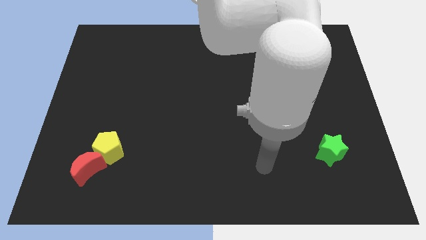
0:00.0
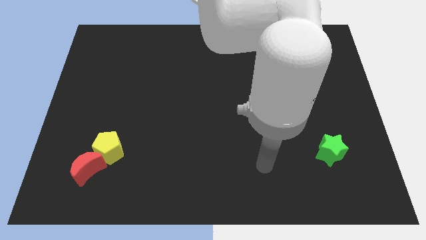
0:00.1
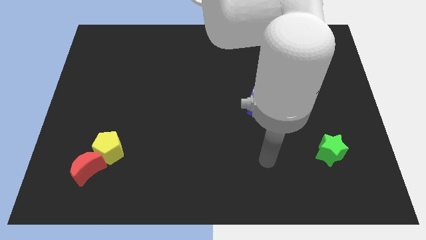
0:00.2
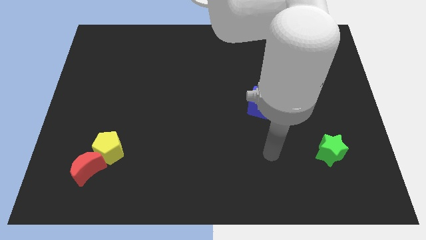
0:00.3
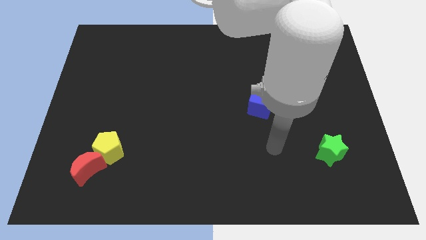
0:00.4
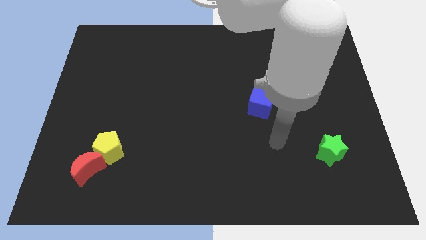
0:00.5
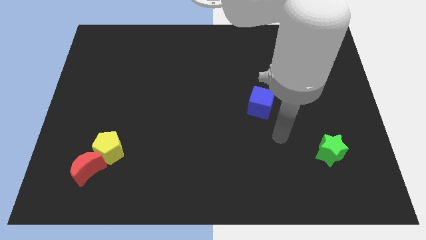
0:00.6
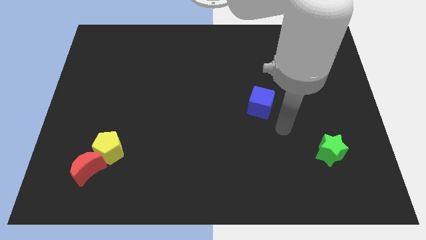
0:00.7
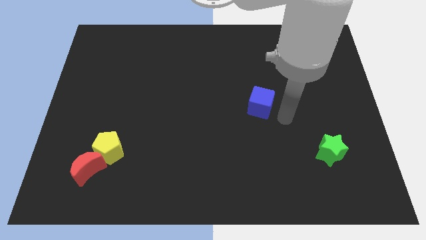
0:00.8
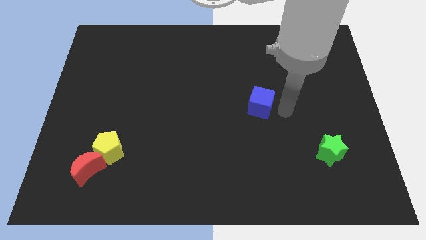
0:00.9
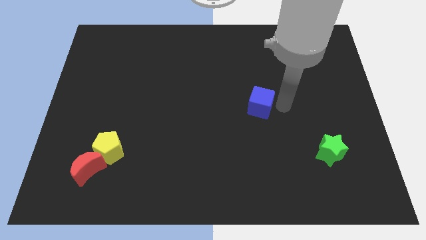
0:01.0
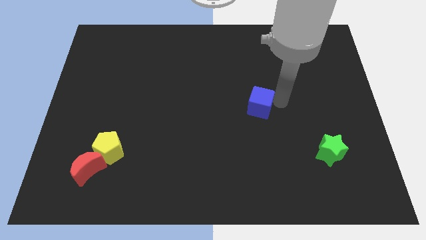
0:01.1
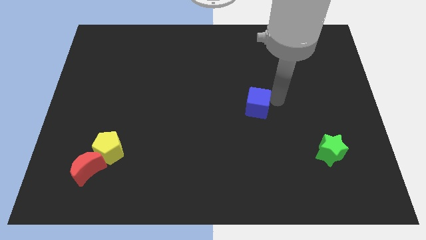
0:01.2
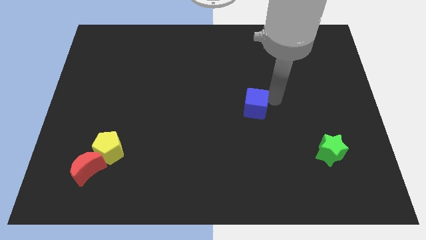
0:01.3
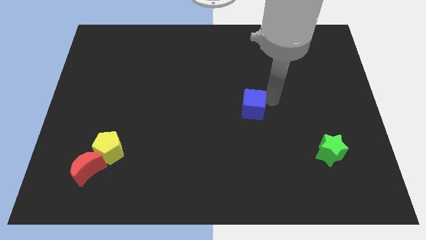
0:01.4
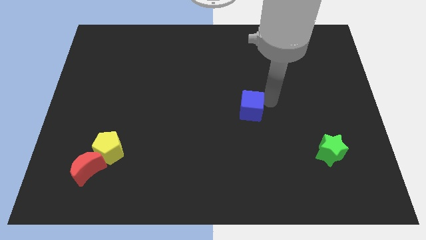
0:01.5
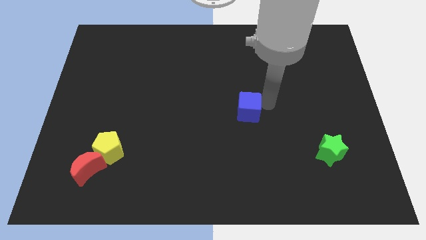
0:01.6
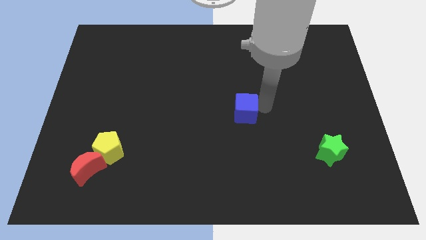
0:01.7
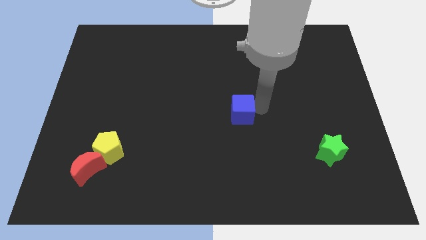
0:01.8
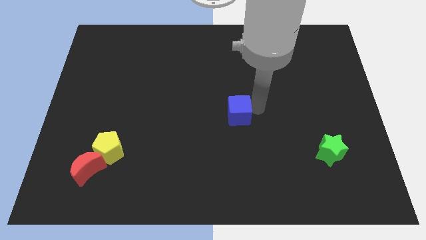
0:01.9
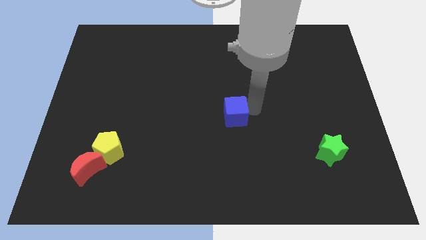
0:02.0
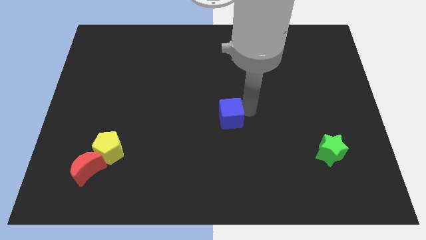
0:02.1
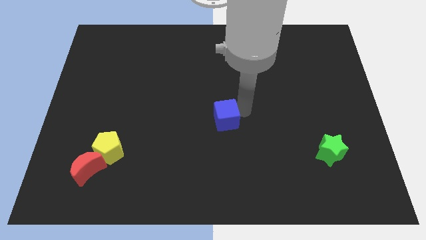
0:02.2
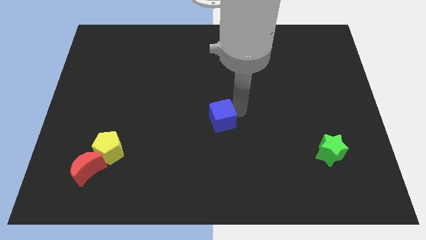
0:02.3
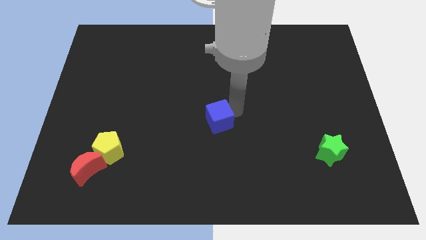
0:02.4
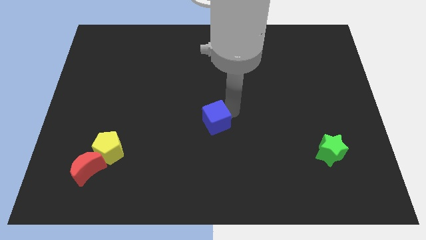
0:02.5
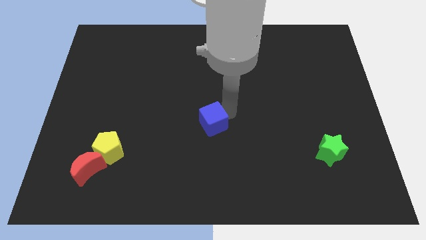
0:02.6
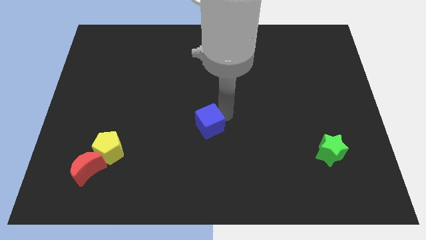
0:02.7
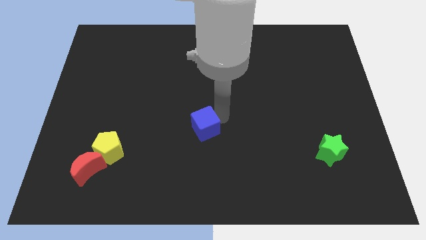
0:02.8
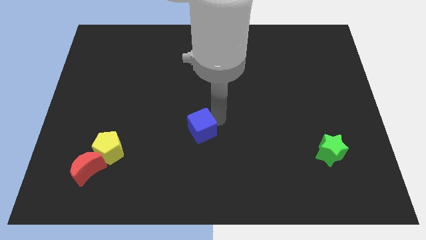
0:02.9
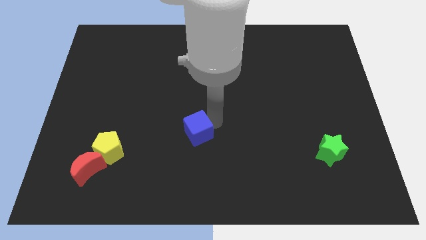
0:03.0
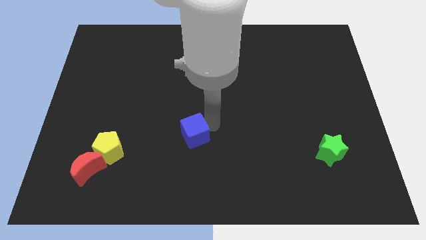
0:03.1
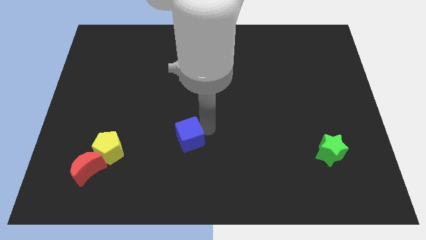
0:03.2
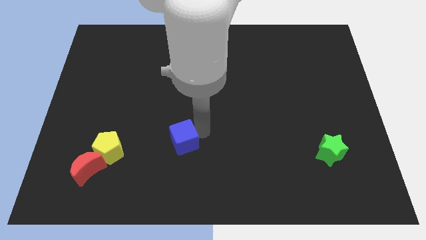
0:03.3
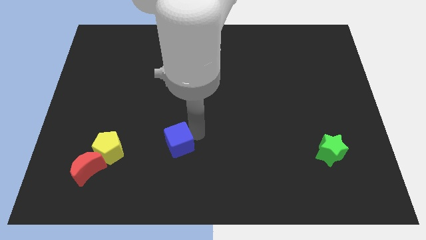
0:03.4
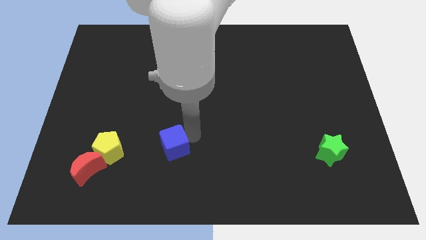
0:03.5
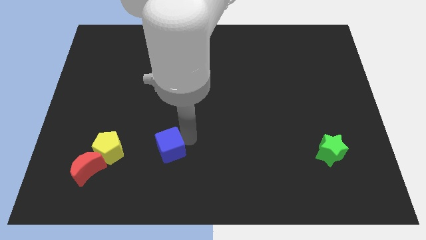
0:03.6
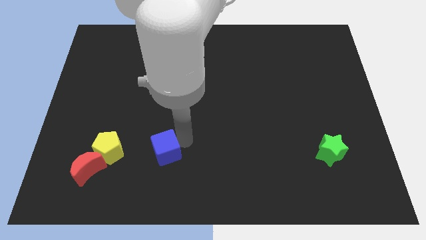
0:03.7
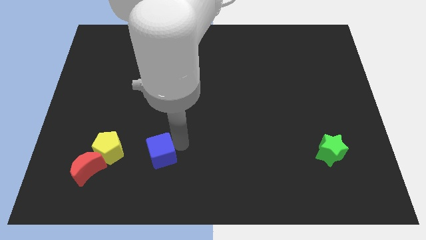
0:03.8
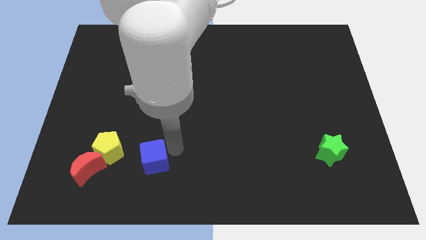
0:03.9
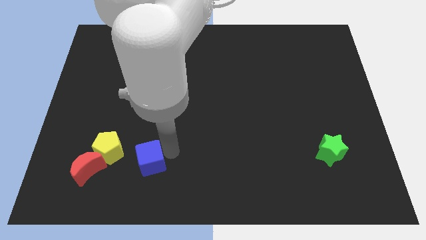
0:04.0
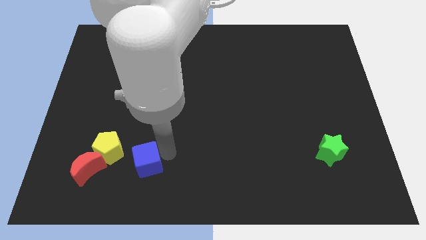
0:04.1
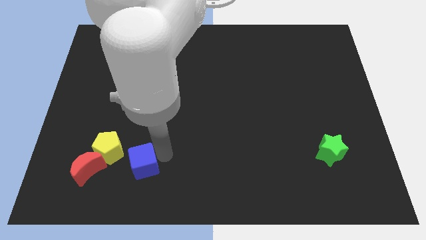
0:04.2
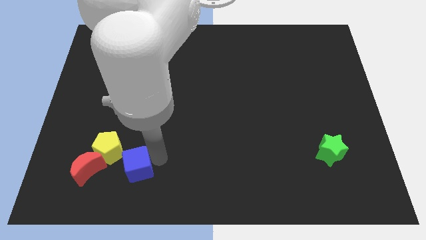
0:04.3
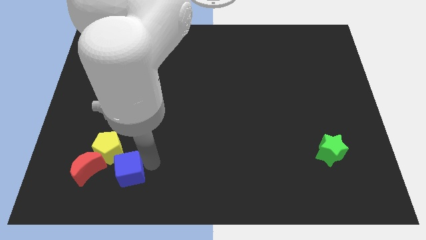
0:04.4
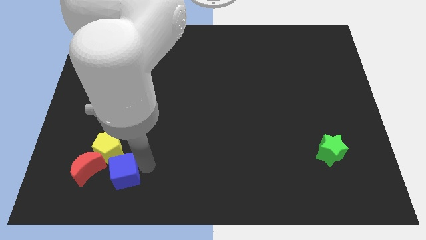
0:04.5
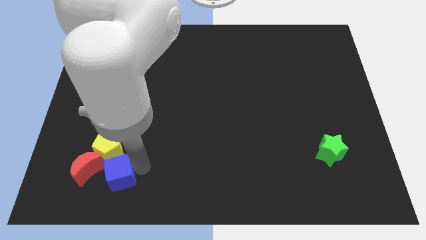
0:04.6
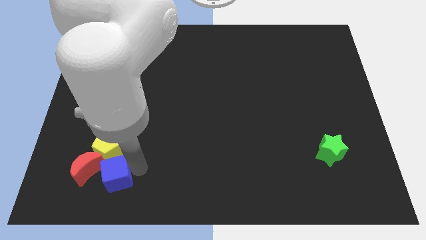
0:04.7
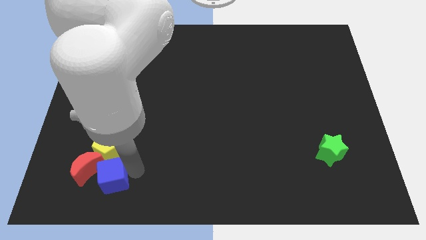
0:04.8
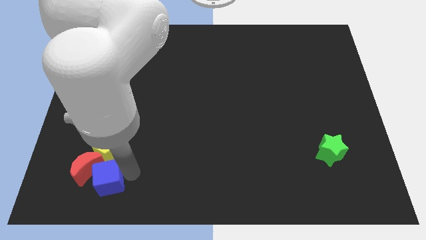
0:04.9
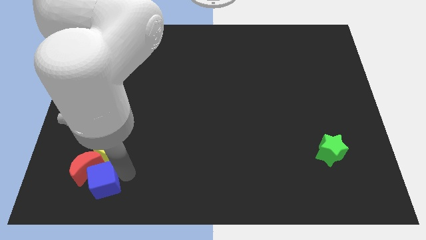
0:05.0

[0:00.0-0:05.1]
put the cube close to the moon

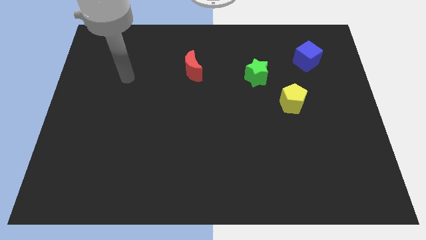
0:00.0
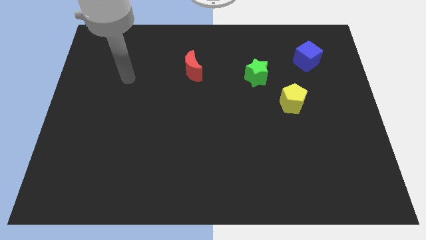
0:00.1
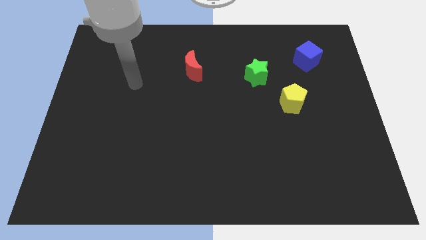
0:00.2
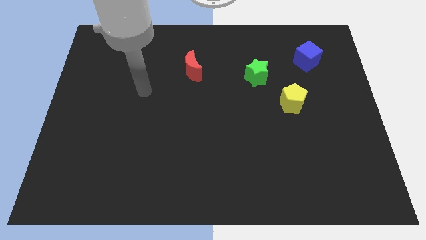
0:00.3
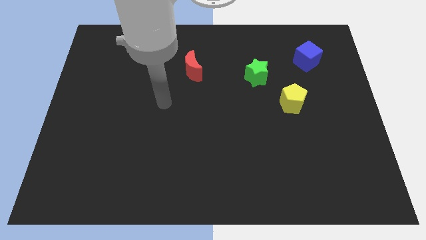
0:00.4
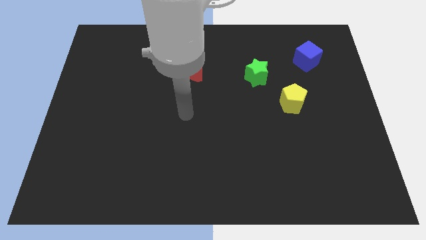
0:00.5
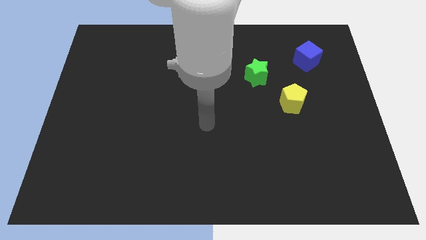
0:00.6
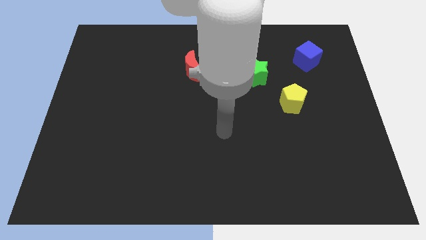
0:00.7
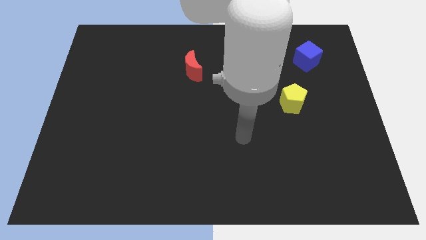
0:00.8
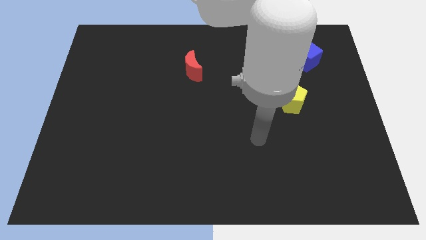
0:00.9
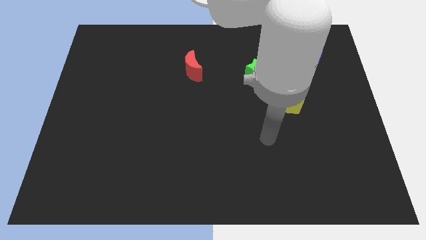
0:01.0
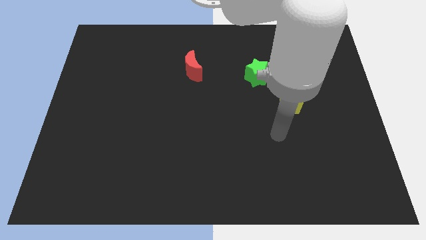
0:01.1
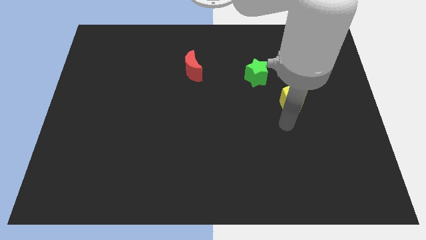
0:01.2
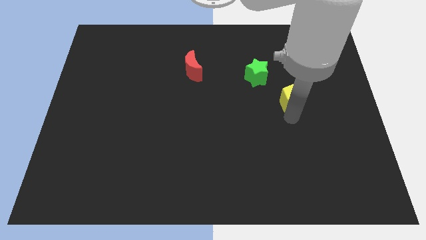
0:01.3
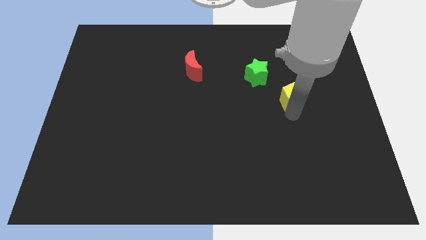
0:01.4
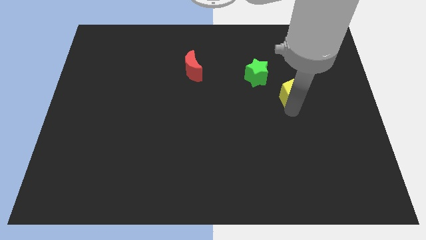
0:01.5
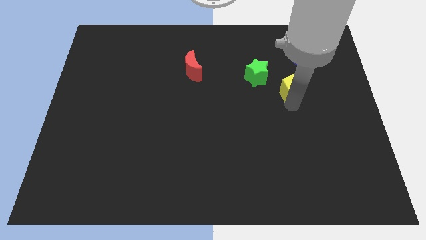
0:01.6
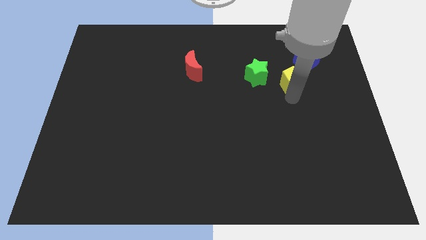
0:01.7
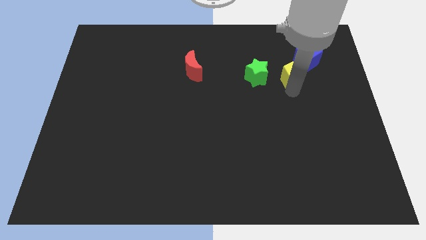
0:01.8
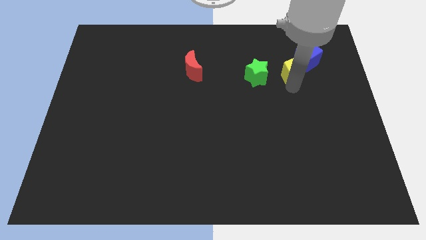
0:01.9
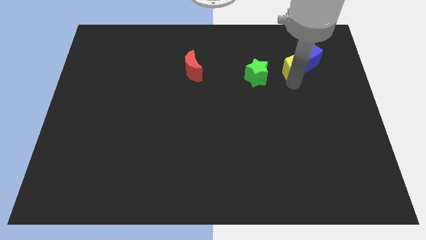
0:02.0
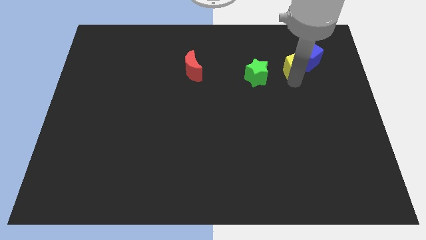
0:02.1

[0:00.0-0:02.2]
move the yellow block to the cube

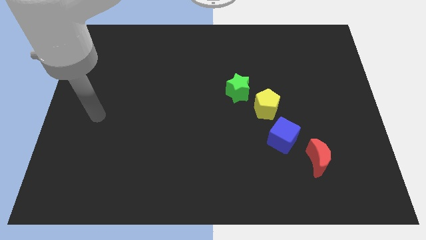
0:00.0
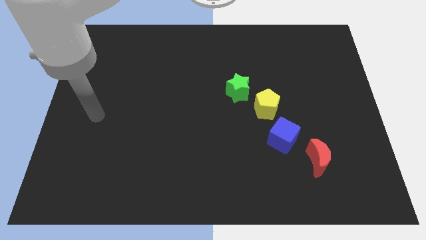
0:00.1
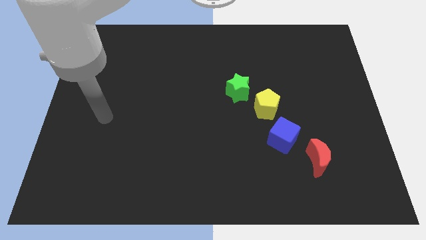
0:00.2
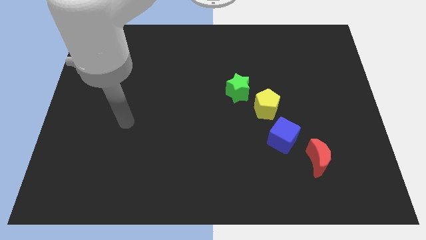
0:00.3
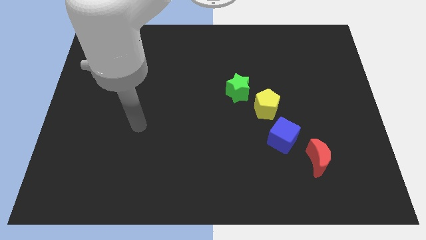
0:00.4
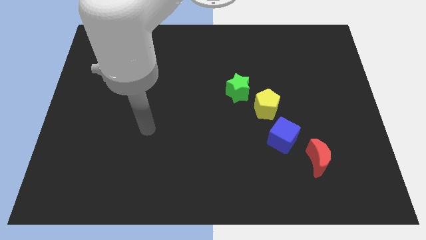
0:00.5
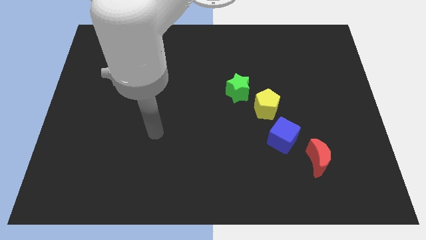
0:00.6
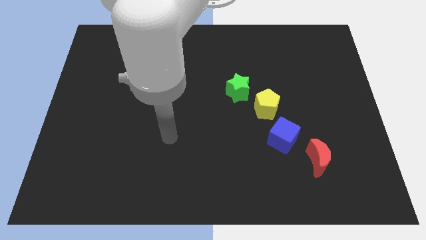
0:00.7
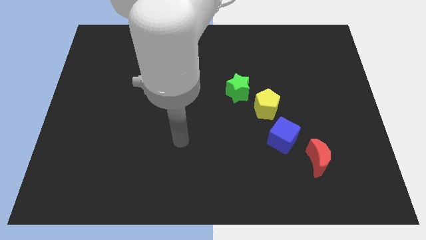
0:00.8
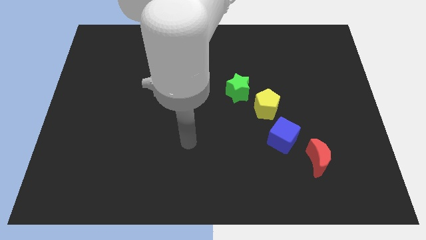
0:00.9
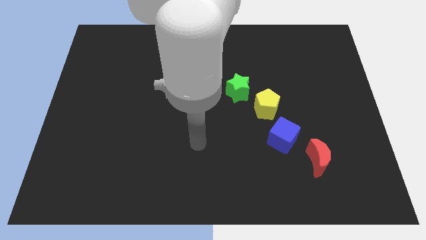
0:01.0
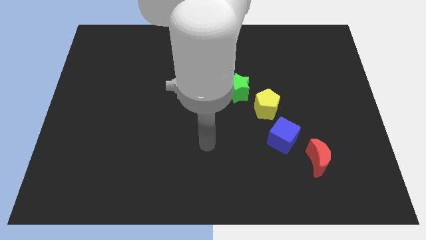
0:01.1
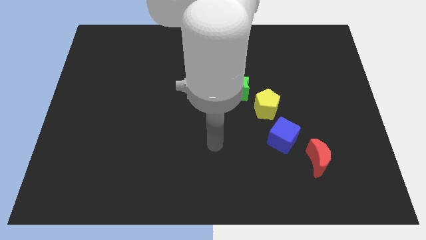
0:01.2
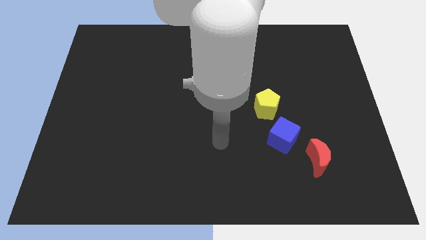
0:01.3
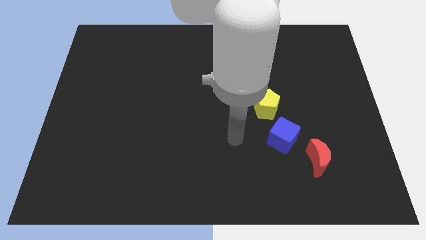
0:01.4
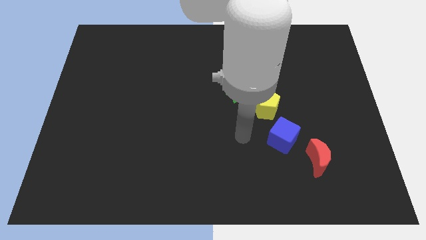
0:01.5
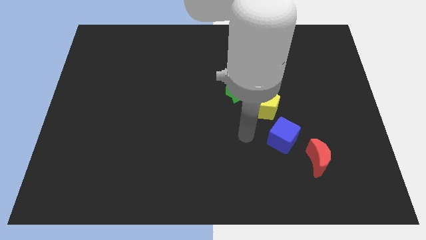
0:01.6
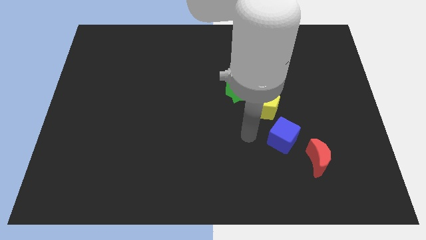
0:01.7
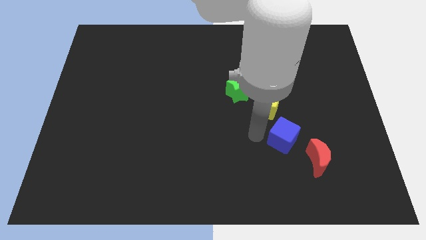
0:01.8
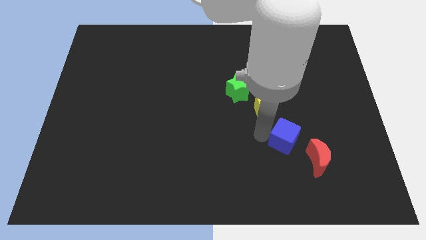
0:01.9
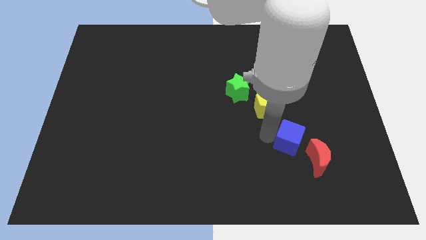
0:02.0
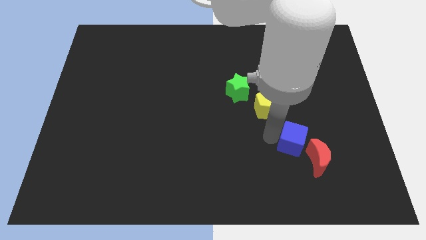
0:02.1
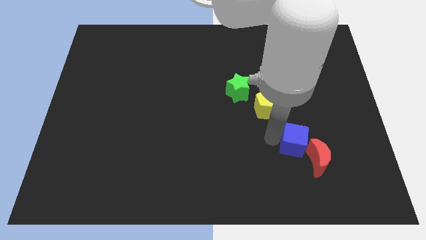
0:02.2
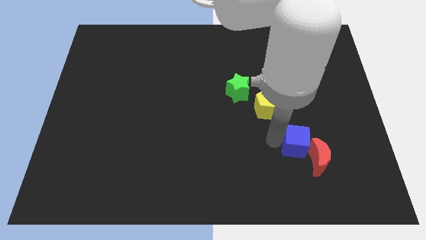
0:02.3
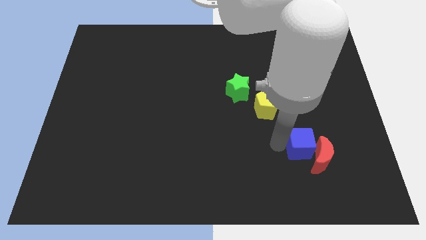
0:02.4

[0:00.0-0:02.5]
put the blue cube towards the red block
